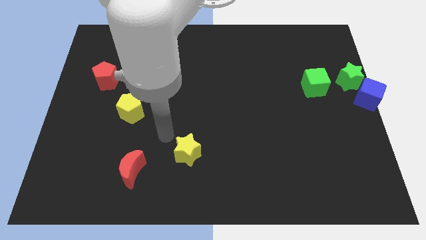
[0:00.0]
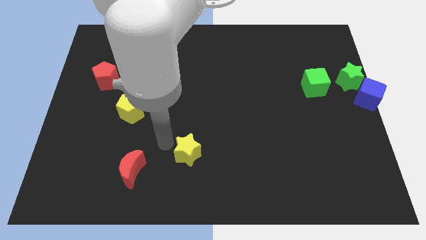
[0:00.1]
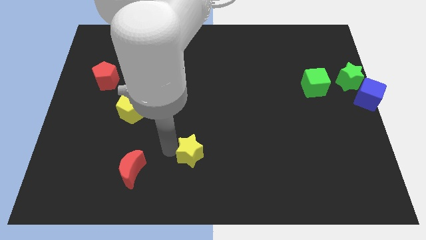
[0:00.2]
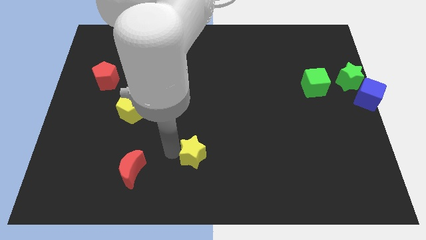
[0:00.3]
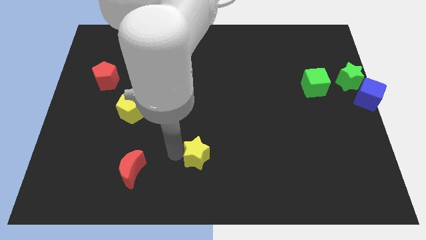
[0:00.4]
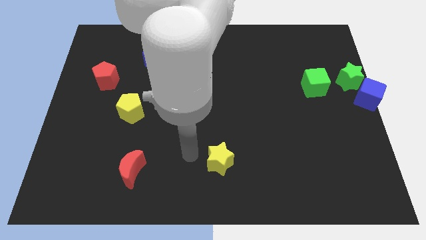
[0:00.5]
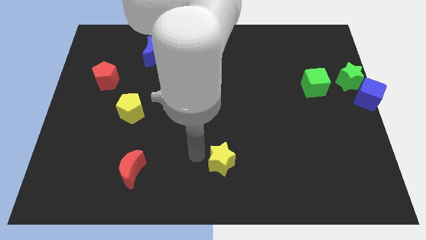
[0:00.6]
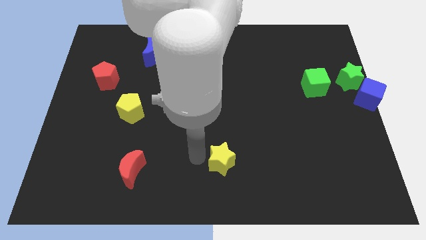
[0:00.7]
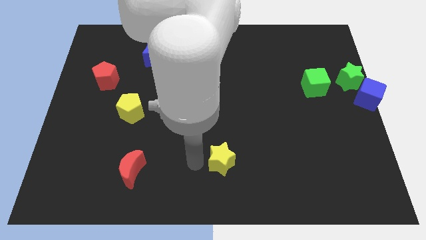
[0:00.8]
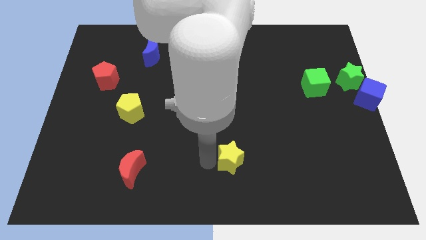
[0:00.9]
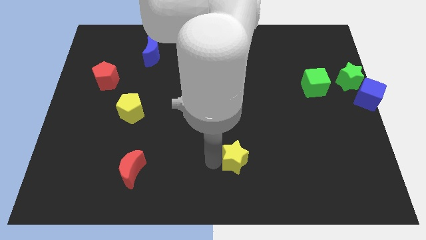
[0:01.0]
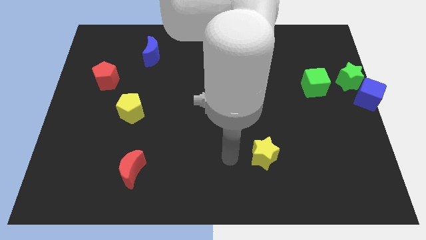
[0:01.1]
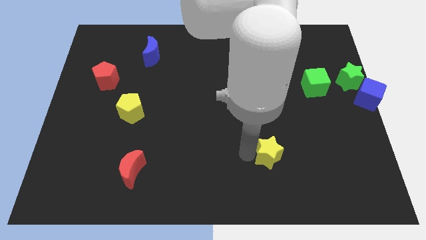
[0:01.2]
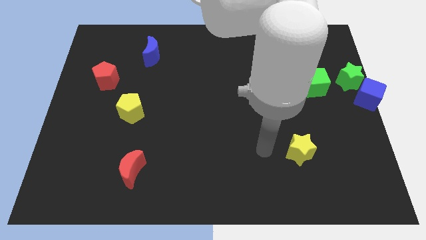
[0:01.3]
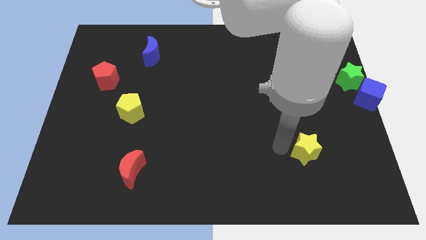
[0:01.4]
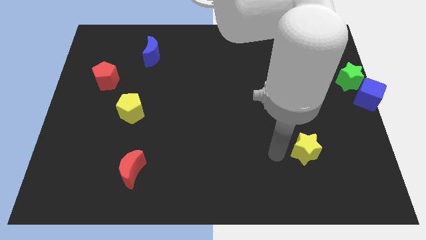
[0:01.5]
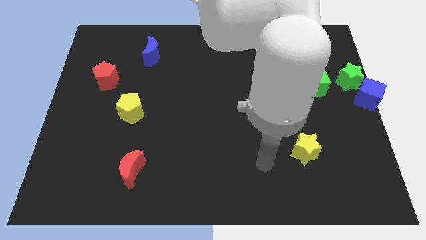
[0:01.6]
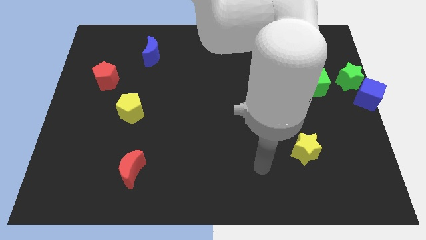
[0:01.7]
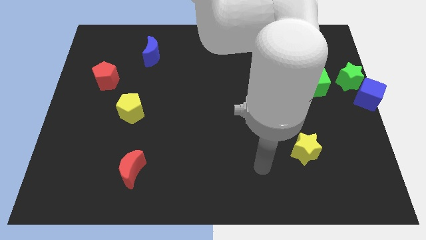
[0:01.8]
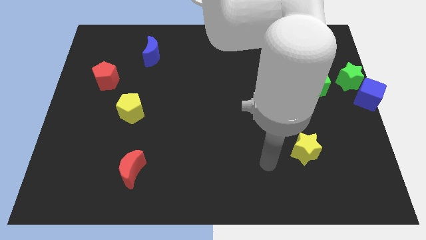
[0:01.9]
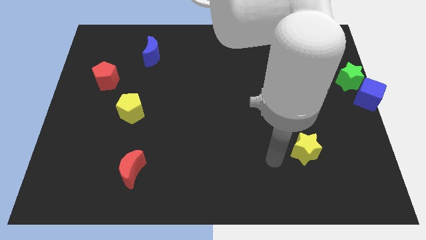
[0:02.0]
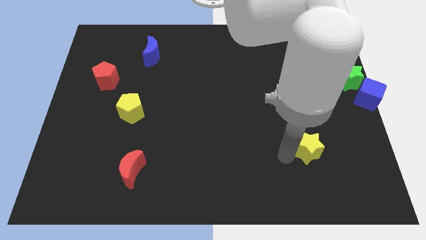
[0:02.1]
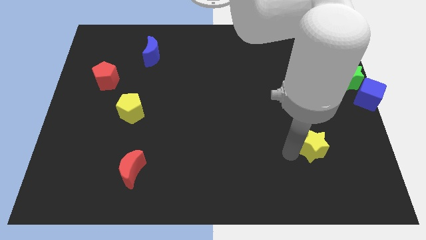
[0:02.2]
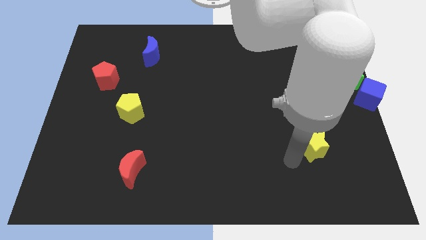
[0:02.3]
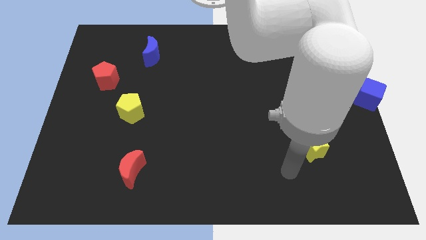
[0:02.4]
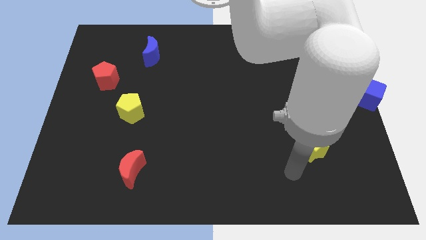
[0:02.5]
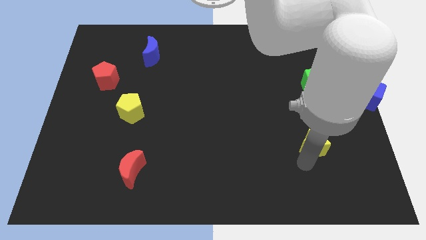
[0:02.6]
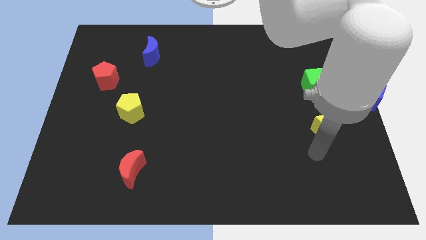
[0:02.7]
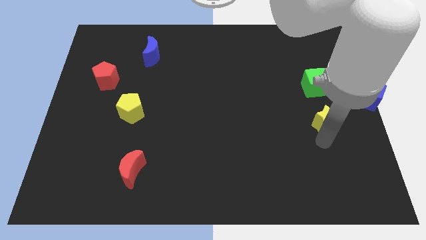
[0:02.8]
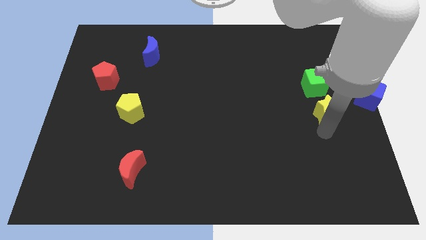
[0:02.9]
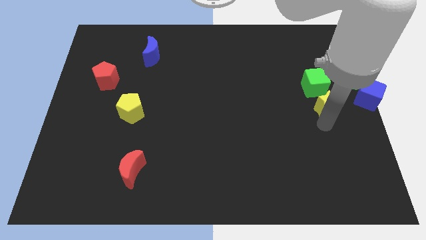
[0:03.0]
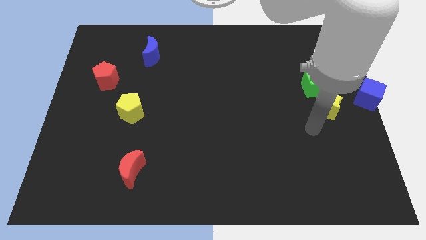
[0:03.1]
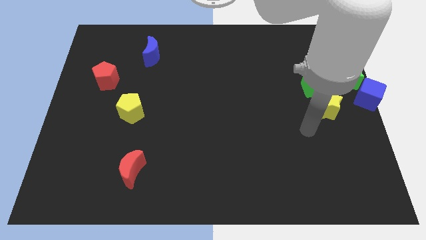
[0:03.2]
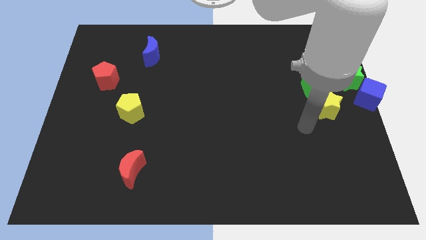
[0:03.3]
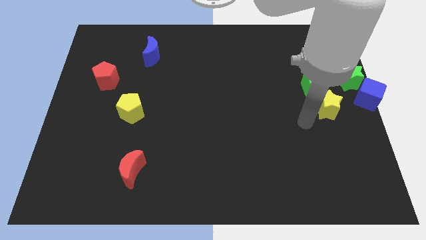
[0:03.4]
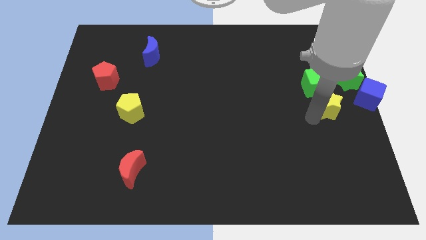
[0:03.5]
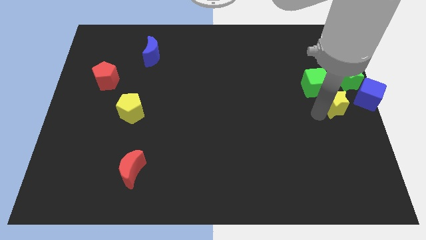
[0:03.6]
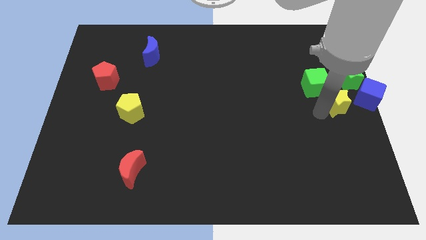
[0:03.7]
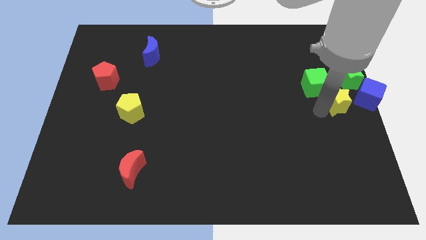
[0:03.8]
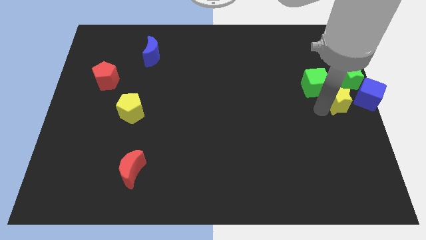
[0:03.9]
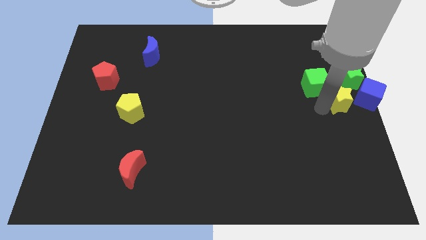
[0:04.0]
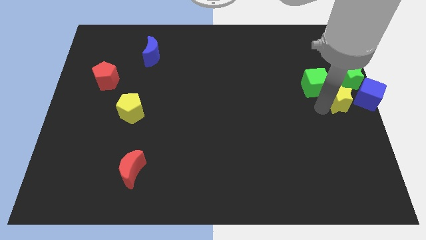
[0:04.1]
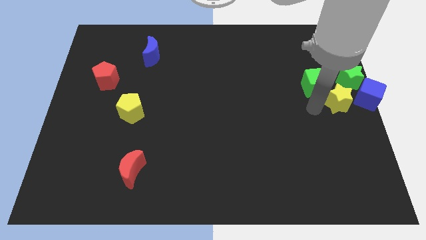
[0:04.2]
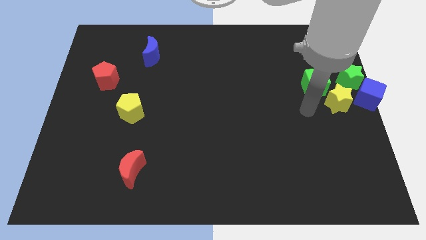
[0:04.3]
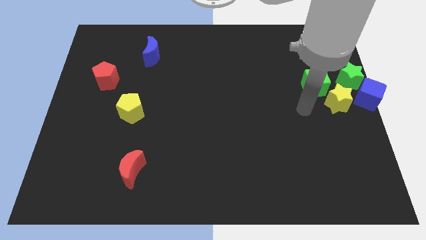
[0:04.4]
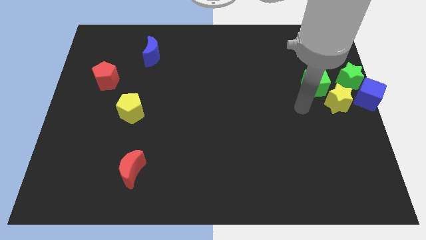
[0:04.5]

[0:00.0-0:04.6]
place the yellow star to the left of blue cube

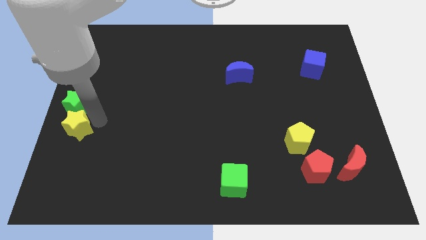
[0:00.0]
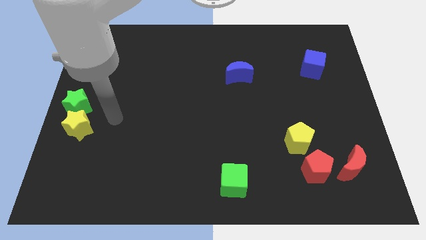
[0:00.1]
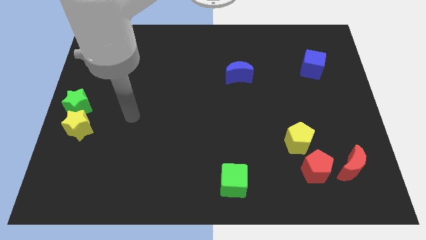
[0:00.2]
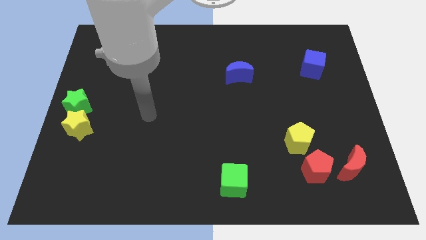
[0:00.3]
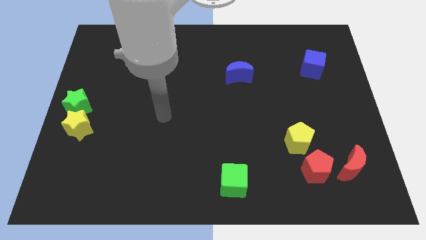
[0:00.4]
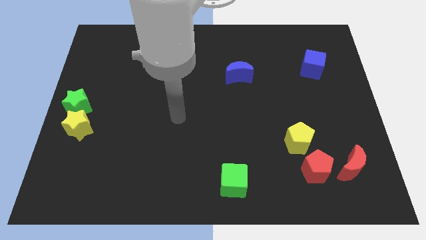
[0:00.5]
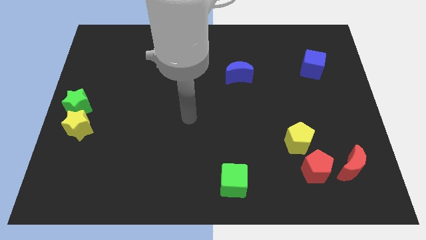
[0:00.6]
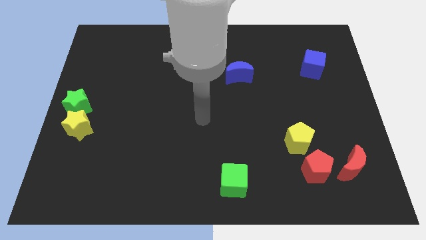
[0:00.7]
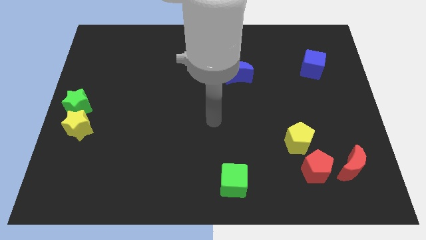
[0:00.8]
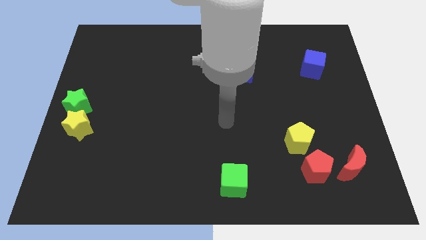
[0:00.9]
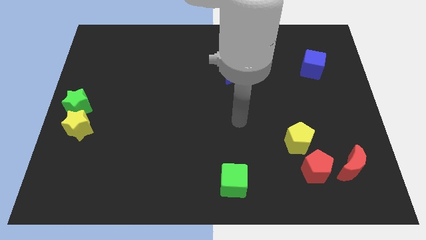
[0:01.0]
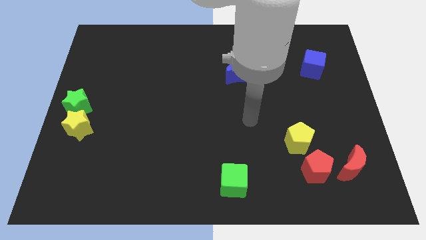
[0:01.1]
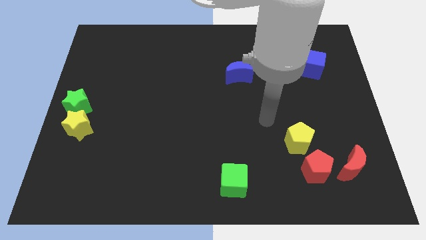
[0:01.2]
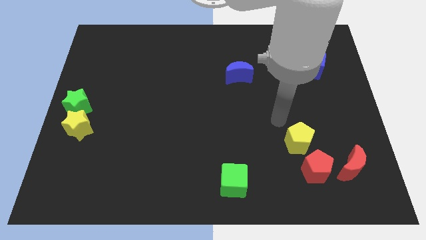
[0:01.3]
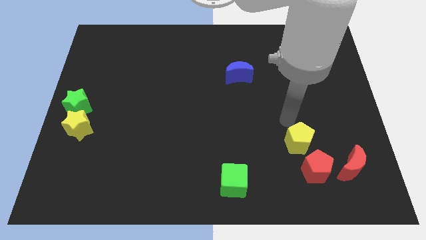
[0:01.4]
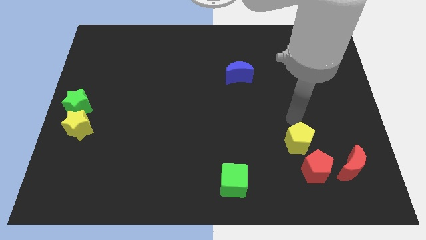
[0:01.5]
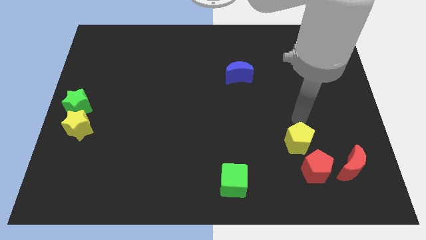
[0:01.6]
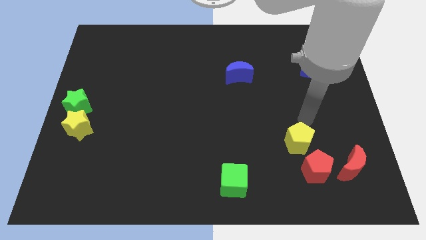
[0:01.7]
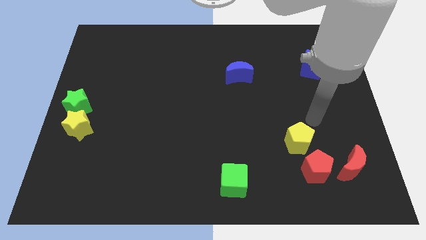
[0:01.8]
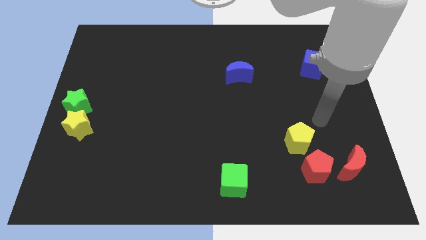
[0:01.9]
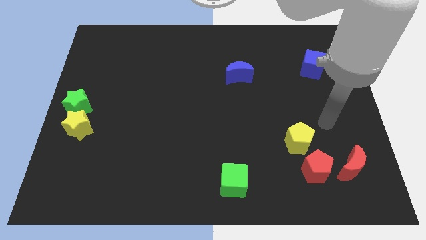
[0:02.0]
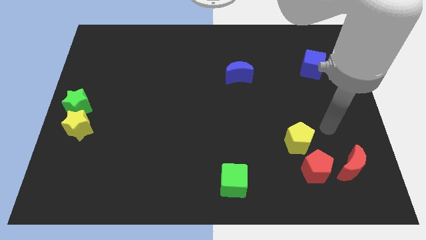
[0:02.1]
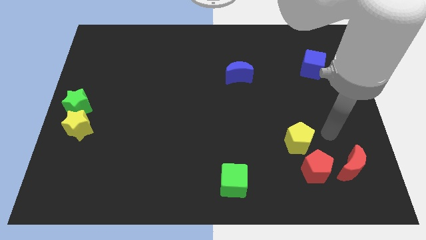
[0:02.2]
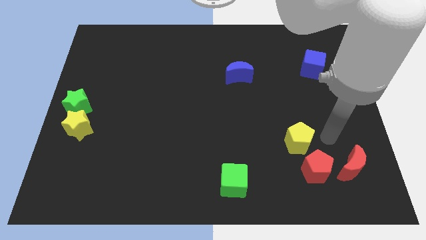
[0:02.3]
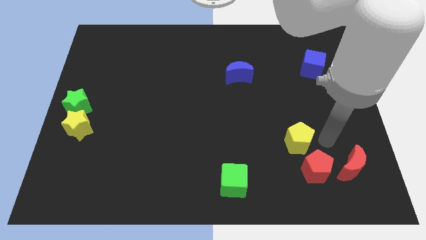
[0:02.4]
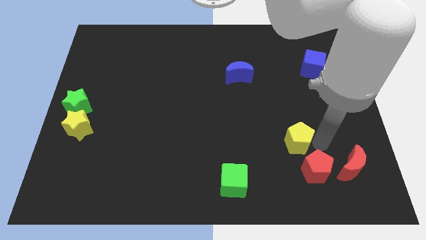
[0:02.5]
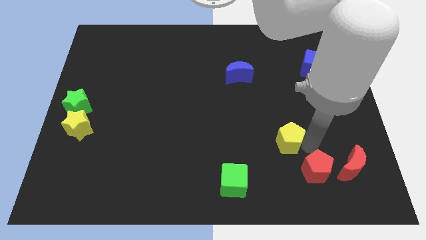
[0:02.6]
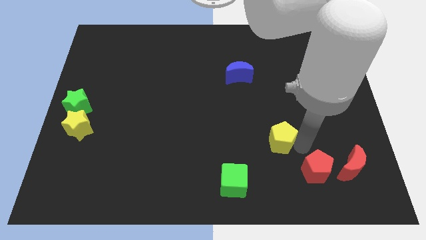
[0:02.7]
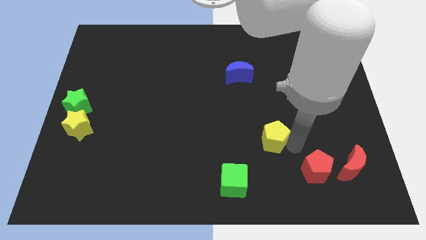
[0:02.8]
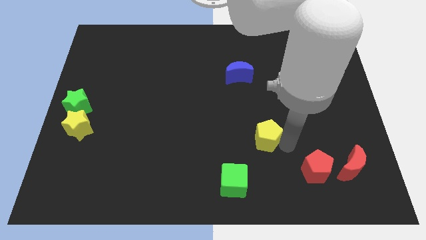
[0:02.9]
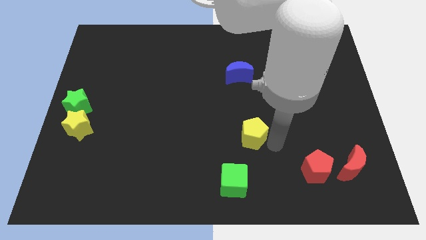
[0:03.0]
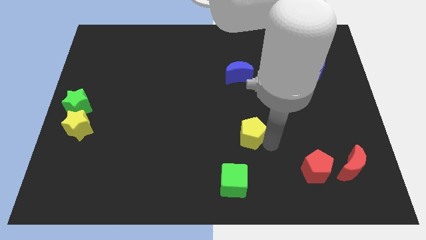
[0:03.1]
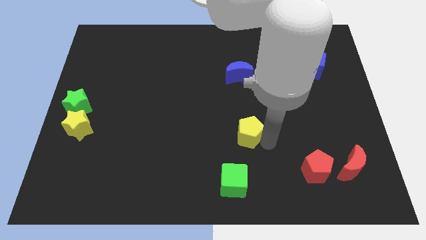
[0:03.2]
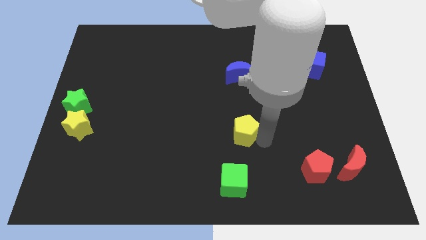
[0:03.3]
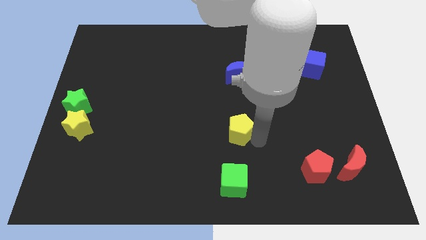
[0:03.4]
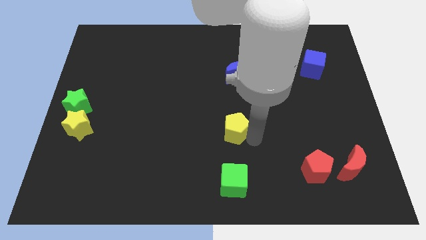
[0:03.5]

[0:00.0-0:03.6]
move the yellow pentagon to the top of the green cube

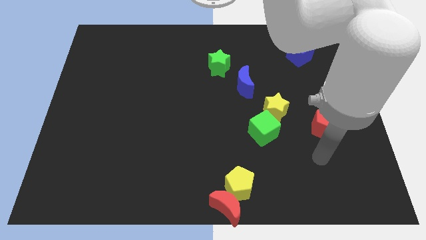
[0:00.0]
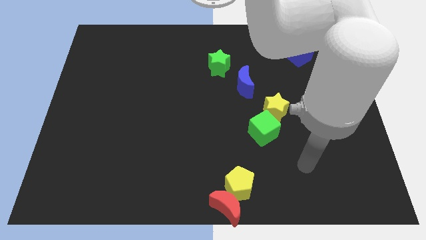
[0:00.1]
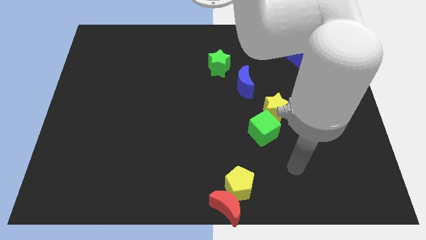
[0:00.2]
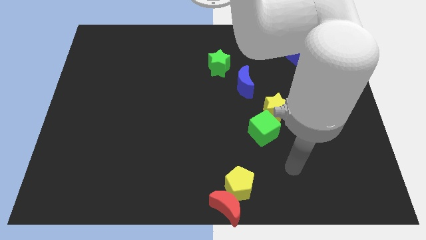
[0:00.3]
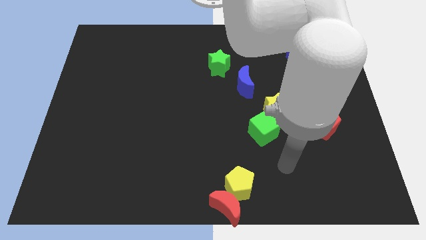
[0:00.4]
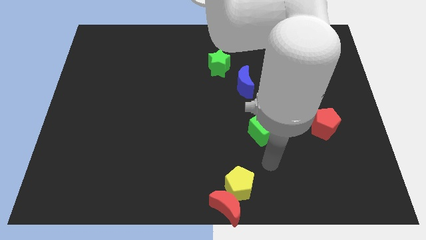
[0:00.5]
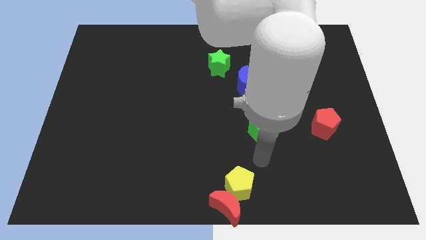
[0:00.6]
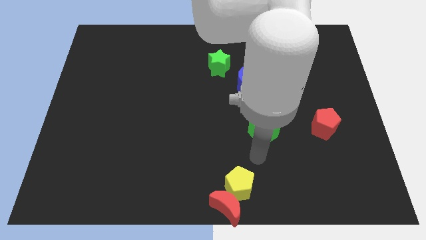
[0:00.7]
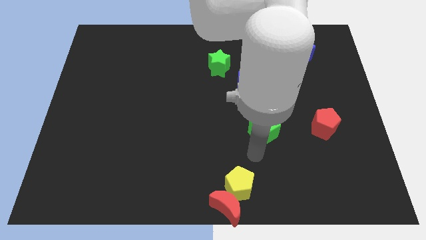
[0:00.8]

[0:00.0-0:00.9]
place your arm in between the yellow pentagon and green cube
